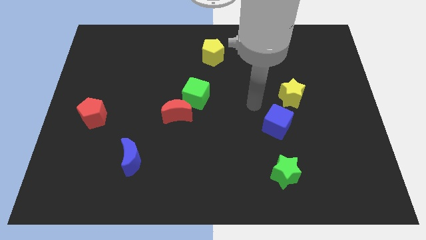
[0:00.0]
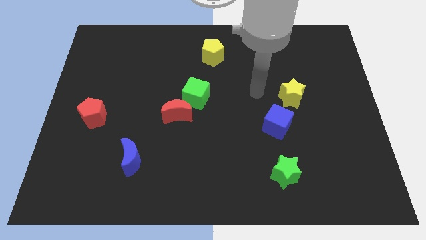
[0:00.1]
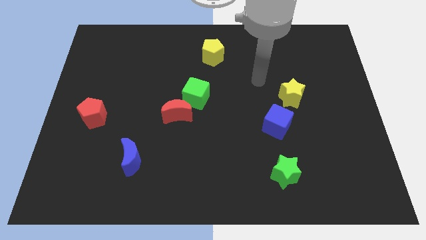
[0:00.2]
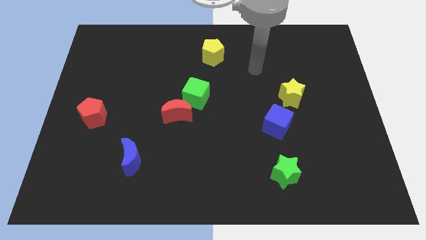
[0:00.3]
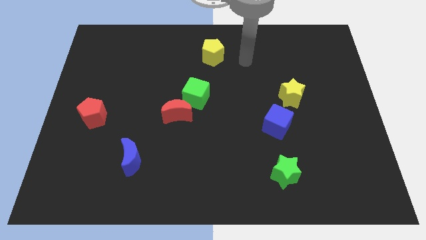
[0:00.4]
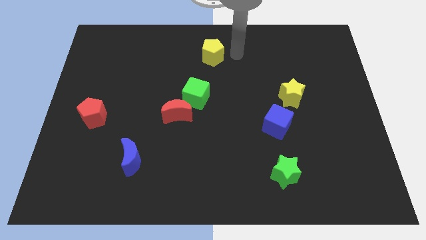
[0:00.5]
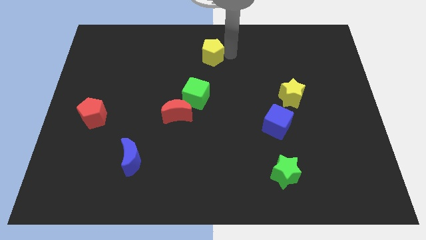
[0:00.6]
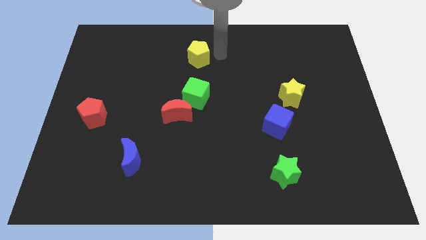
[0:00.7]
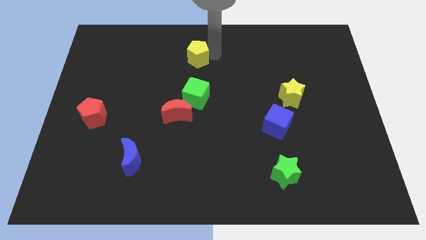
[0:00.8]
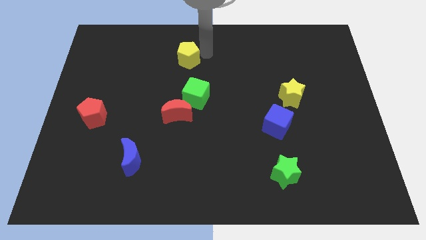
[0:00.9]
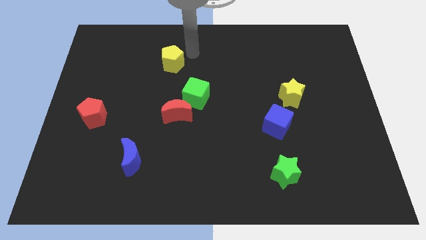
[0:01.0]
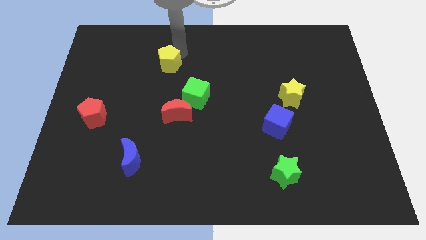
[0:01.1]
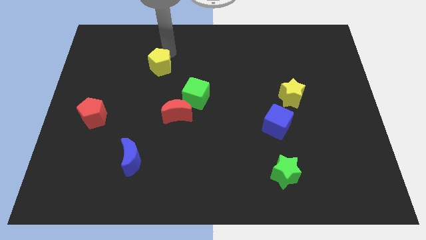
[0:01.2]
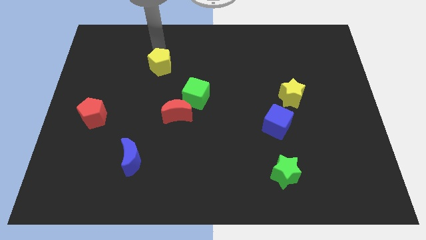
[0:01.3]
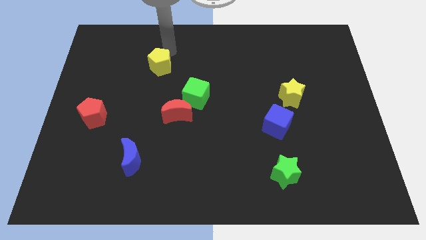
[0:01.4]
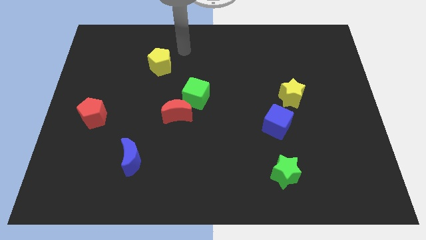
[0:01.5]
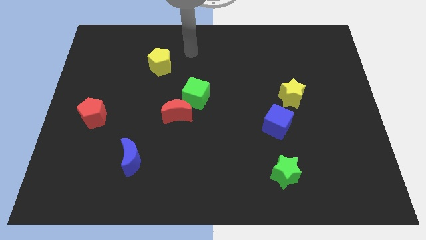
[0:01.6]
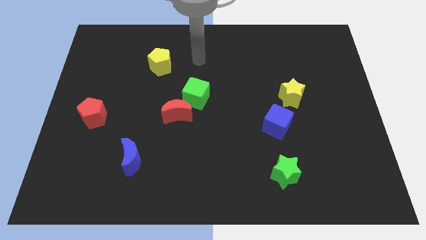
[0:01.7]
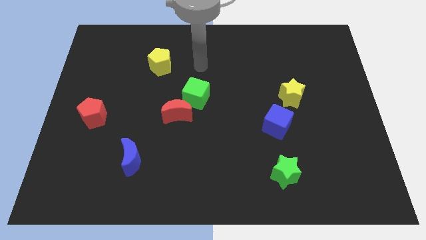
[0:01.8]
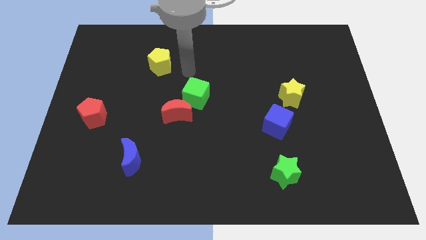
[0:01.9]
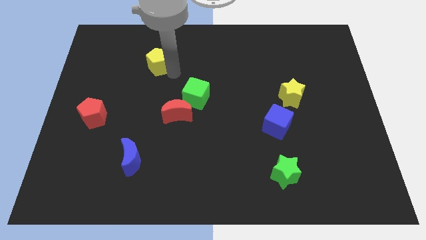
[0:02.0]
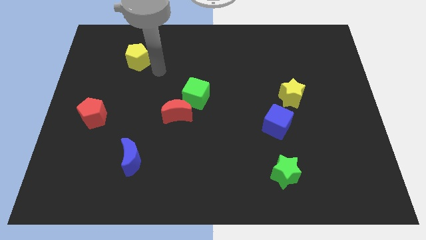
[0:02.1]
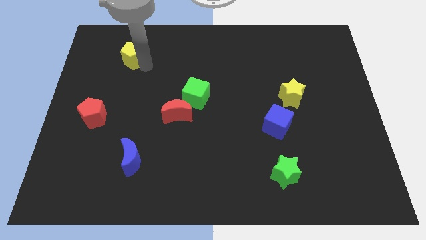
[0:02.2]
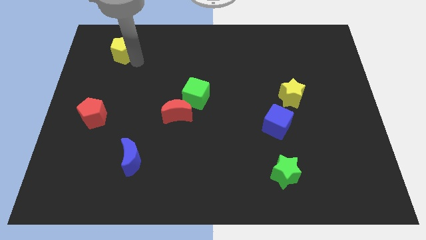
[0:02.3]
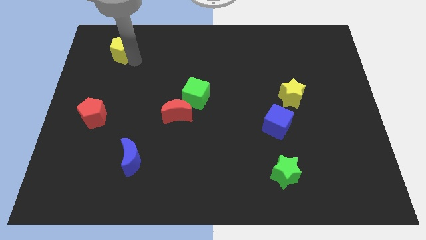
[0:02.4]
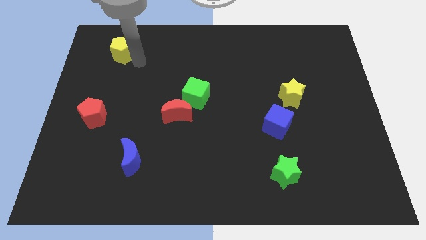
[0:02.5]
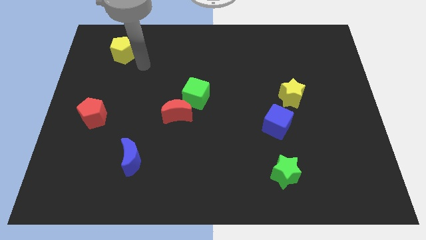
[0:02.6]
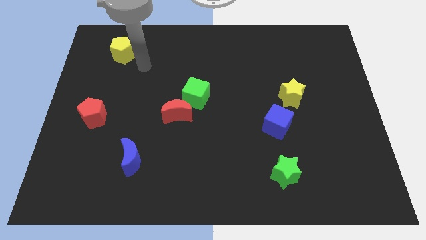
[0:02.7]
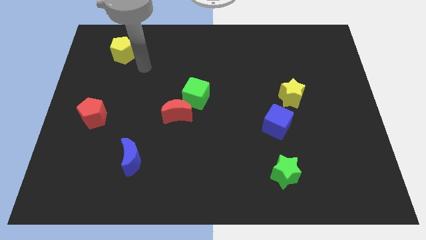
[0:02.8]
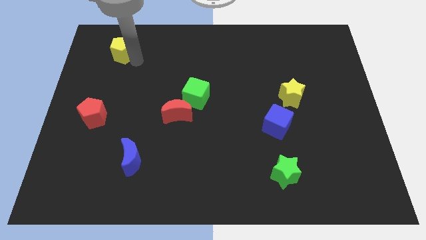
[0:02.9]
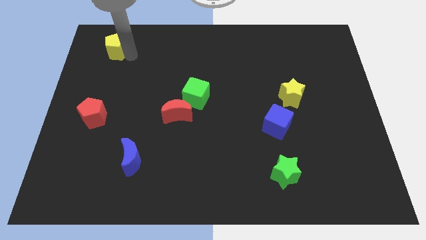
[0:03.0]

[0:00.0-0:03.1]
push the yellow pentagon to the top left of the red crescent

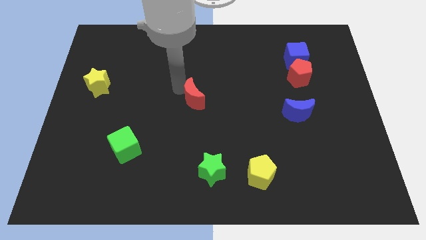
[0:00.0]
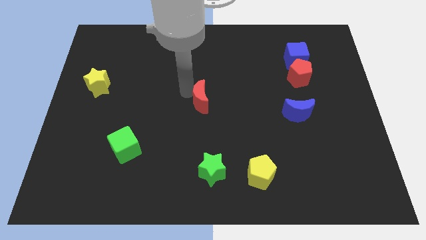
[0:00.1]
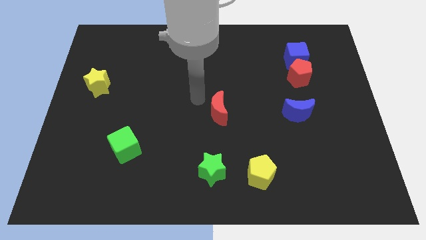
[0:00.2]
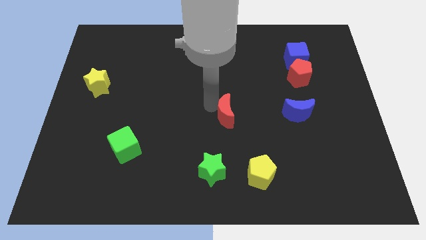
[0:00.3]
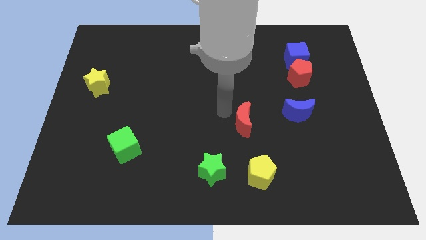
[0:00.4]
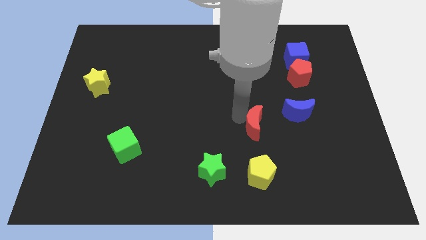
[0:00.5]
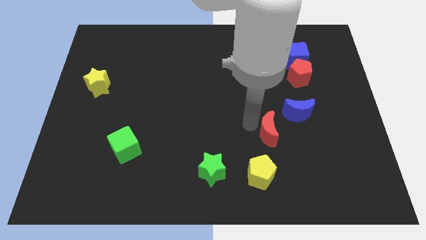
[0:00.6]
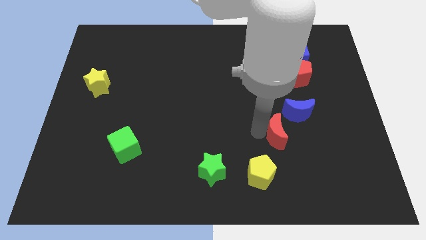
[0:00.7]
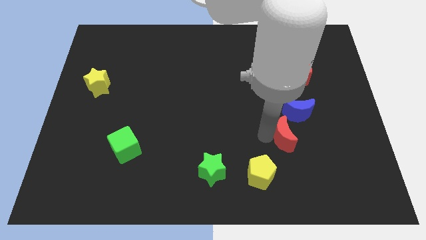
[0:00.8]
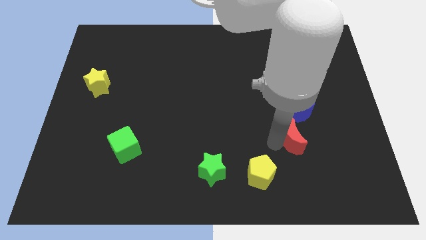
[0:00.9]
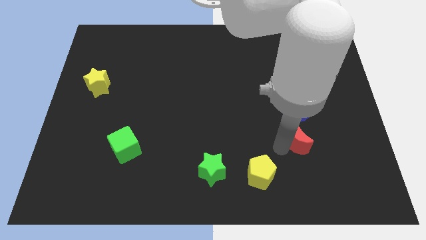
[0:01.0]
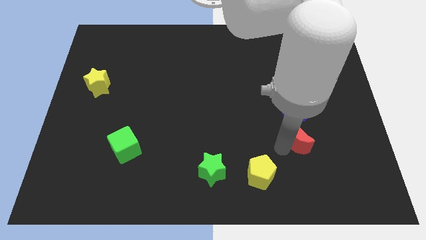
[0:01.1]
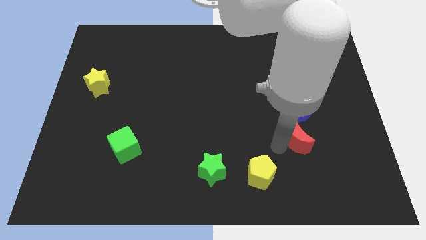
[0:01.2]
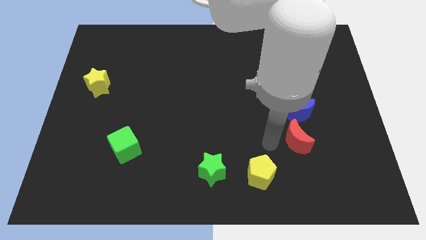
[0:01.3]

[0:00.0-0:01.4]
place red moon below blue moon

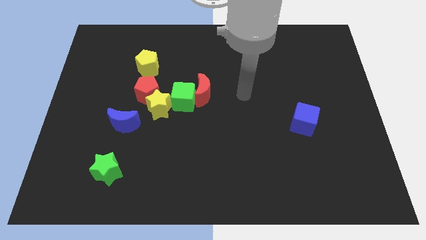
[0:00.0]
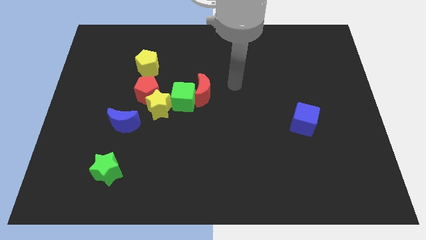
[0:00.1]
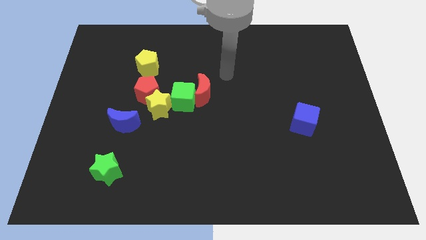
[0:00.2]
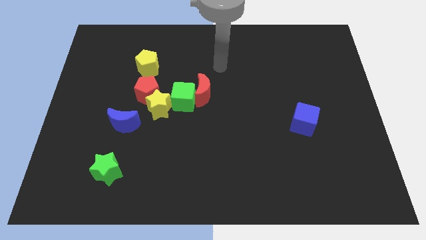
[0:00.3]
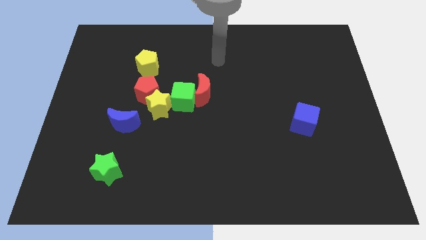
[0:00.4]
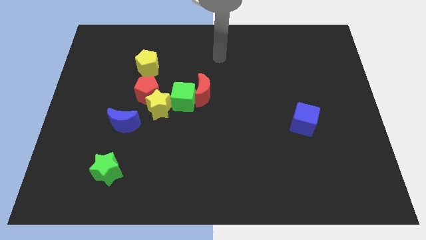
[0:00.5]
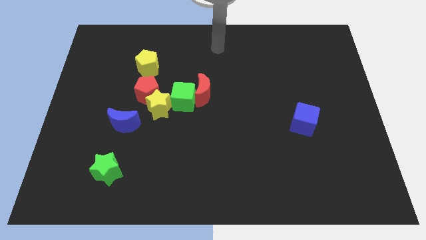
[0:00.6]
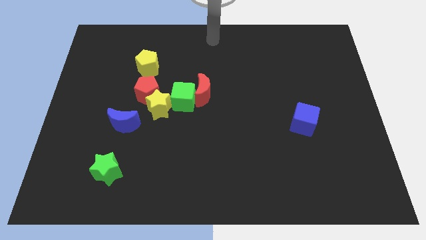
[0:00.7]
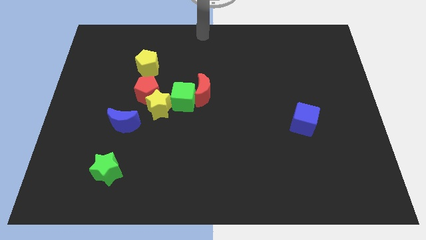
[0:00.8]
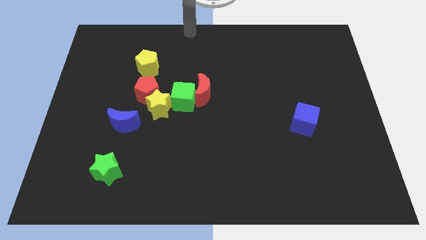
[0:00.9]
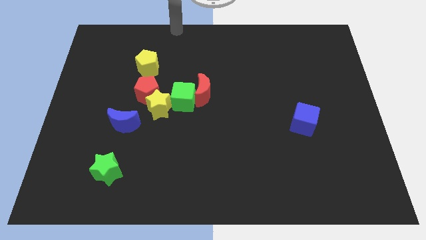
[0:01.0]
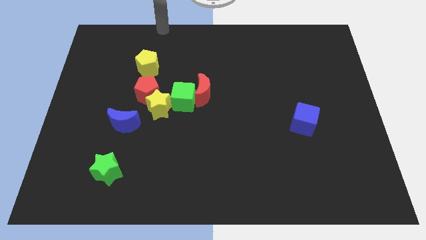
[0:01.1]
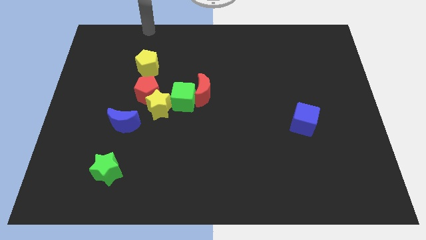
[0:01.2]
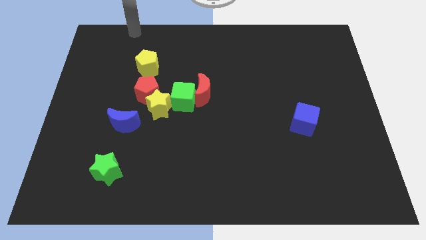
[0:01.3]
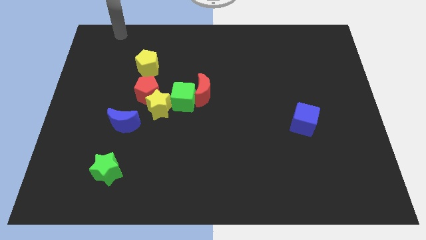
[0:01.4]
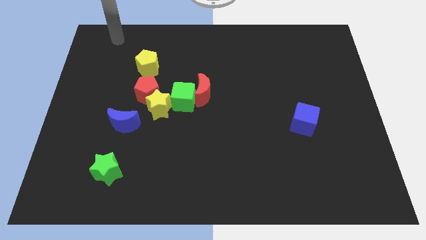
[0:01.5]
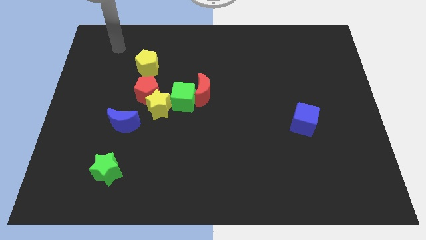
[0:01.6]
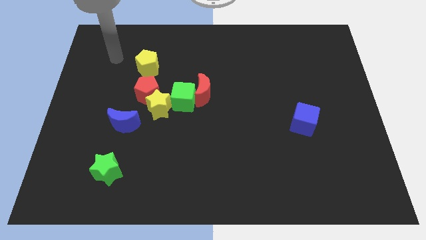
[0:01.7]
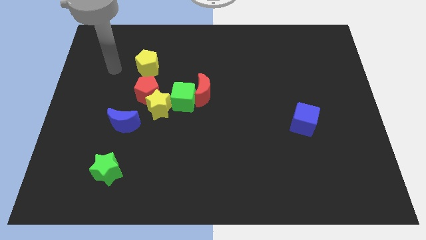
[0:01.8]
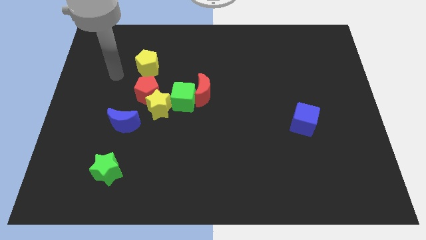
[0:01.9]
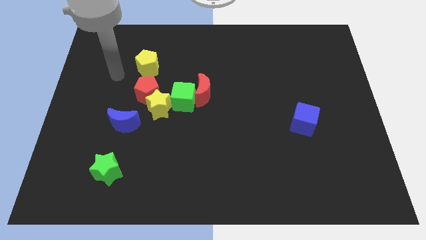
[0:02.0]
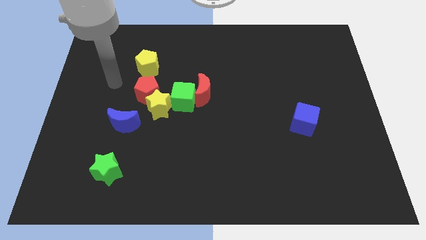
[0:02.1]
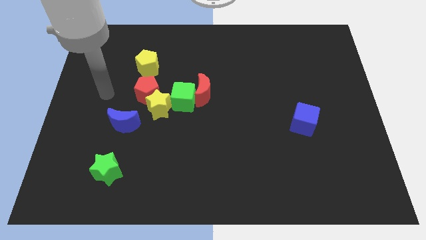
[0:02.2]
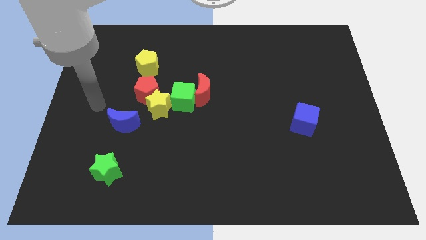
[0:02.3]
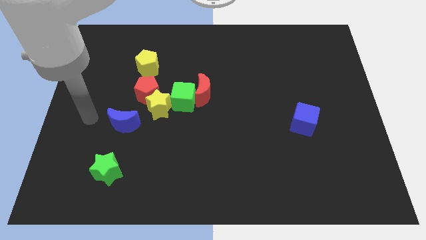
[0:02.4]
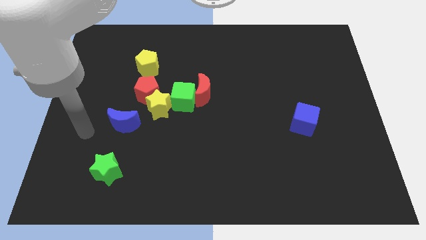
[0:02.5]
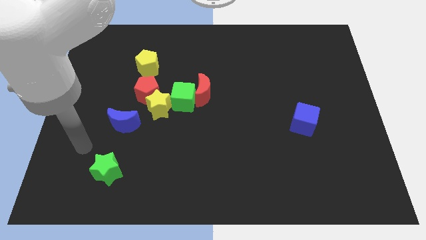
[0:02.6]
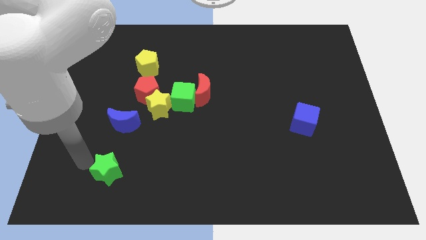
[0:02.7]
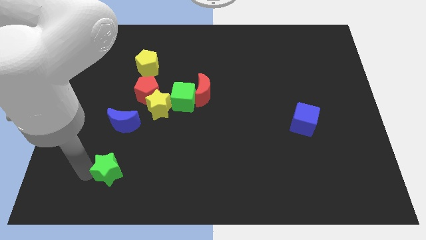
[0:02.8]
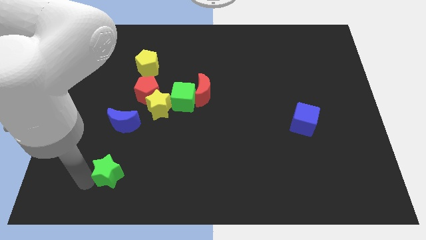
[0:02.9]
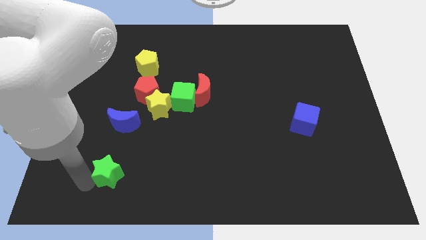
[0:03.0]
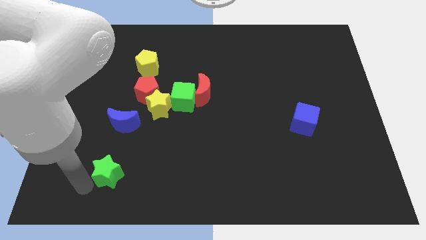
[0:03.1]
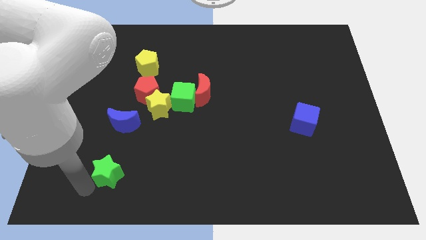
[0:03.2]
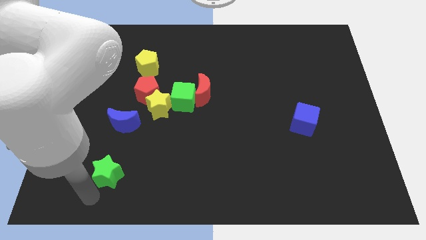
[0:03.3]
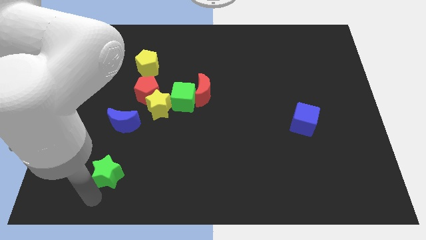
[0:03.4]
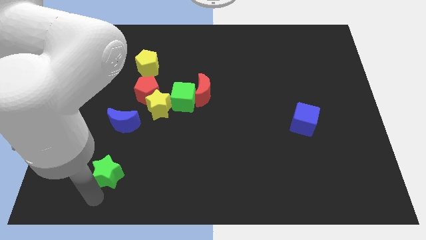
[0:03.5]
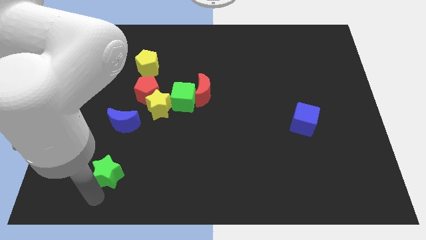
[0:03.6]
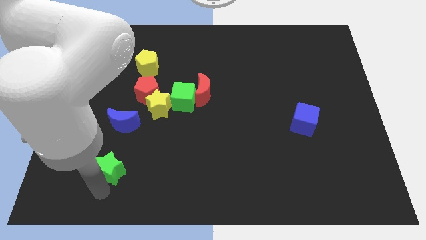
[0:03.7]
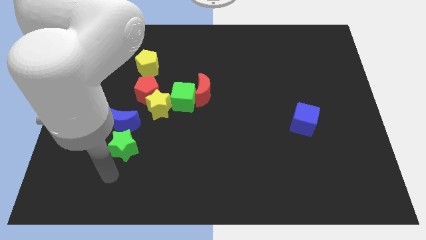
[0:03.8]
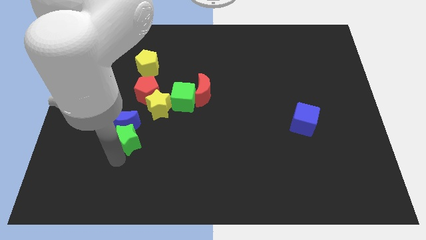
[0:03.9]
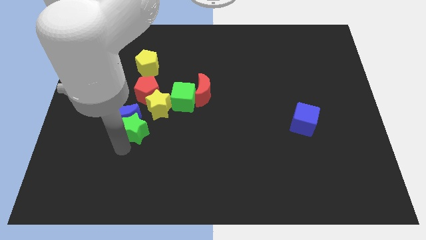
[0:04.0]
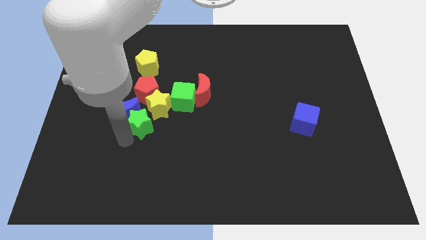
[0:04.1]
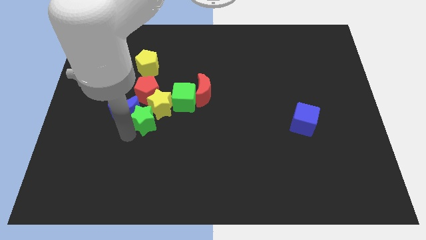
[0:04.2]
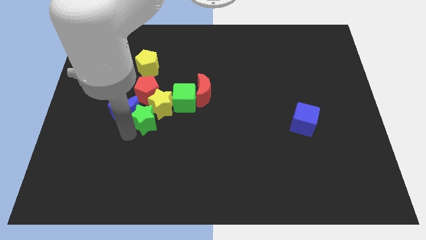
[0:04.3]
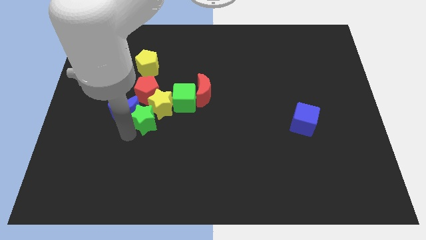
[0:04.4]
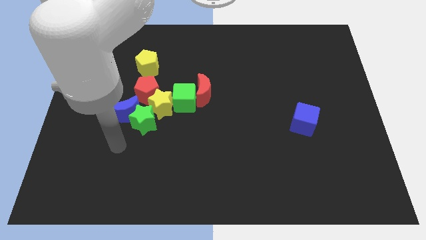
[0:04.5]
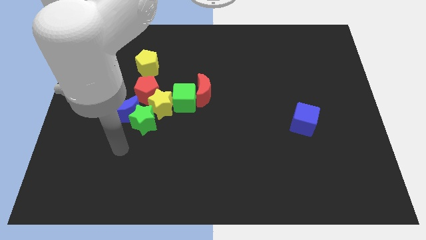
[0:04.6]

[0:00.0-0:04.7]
push the green star into the blue crescent and yellow star
